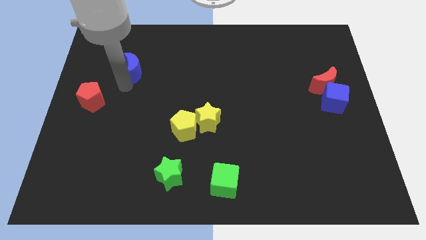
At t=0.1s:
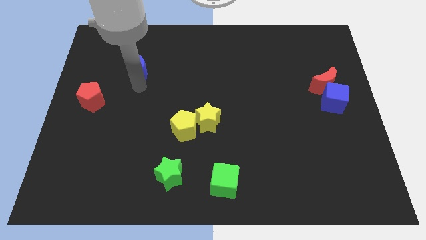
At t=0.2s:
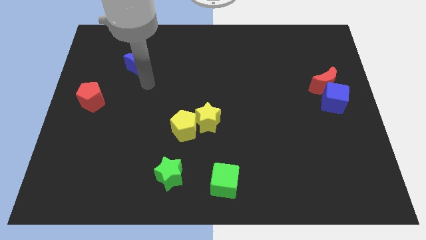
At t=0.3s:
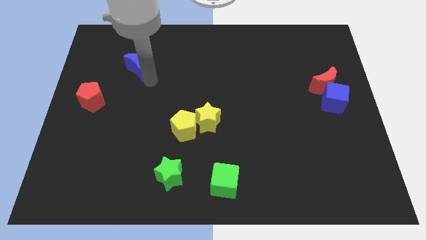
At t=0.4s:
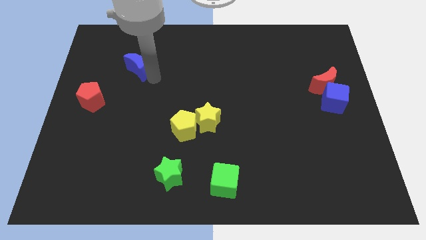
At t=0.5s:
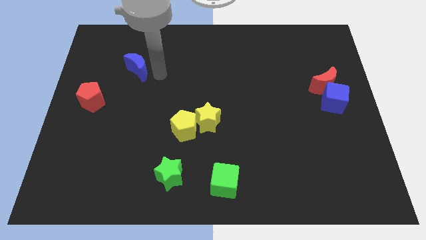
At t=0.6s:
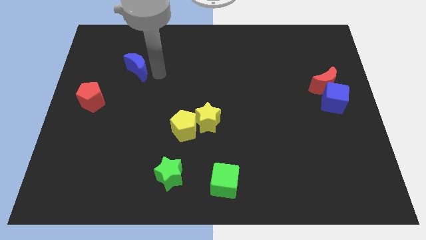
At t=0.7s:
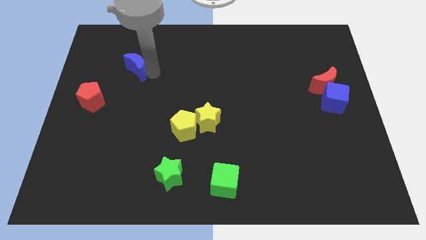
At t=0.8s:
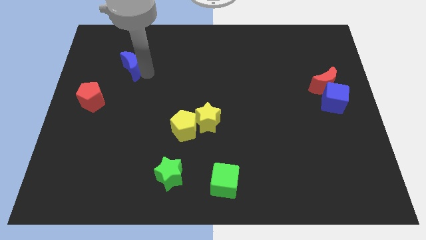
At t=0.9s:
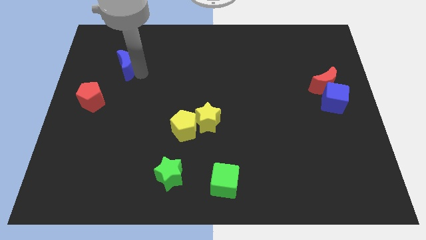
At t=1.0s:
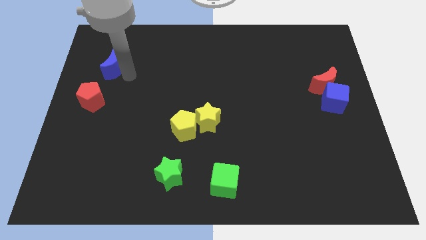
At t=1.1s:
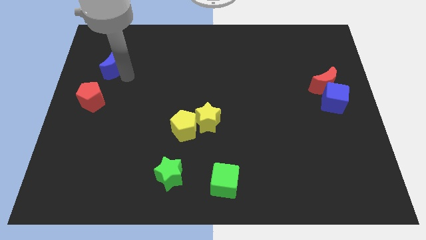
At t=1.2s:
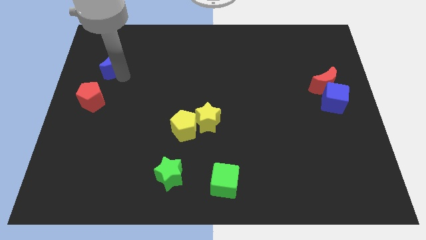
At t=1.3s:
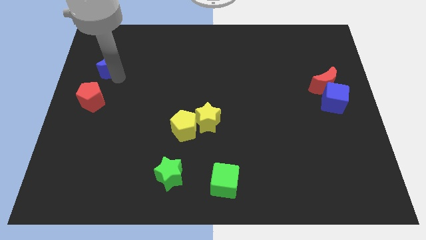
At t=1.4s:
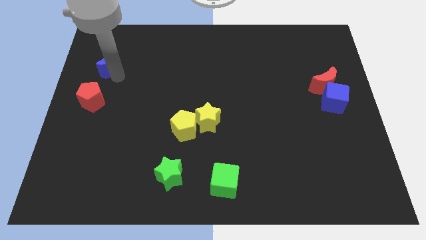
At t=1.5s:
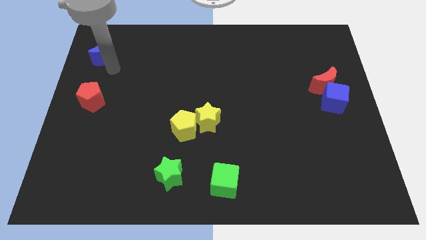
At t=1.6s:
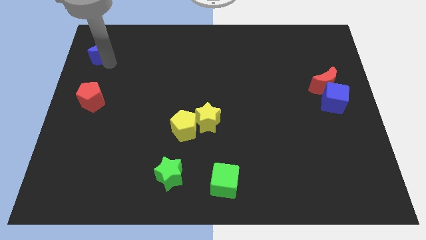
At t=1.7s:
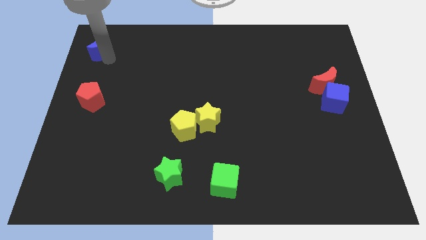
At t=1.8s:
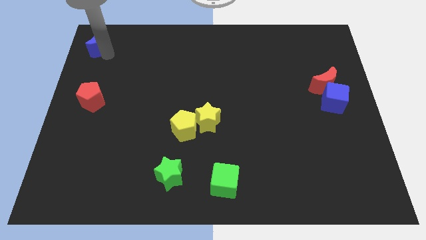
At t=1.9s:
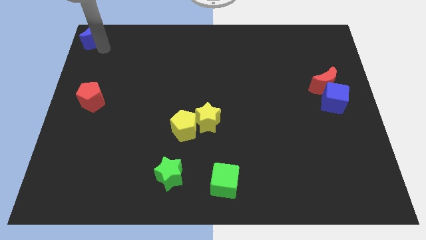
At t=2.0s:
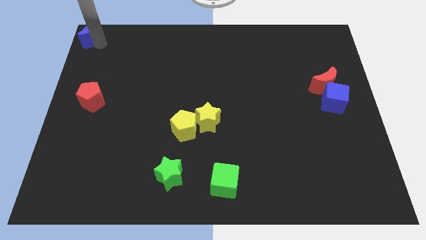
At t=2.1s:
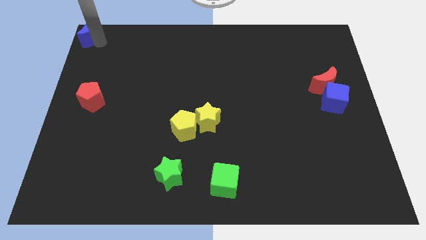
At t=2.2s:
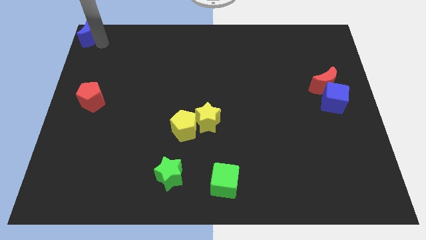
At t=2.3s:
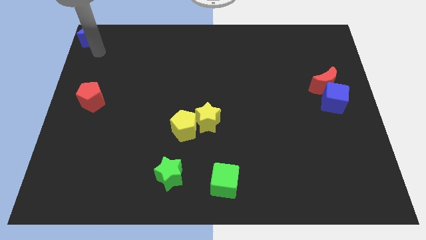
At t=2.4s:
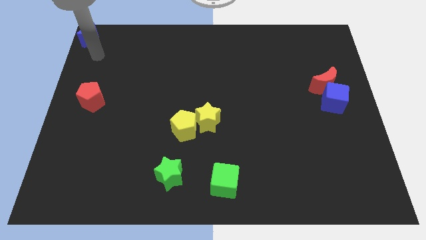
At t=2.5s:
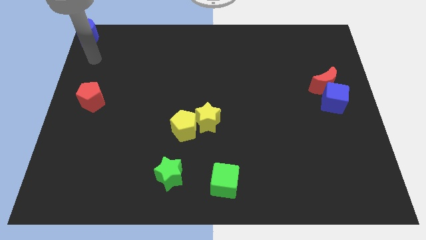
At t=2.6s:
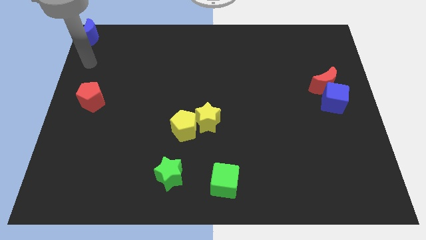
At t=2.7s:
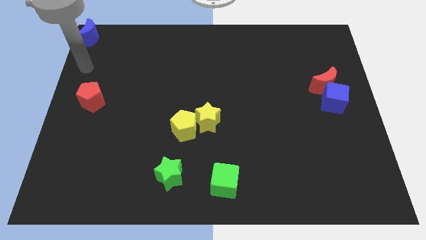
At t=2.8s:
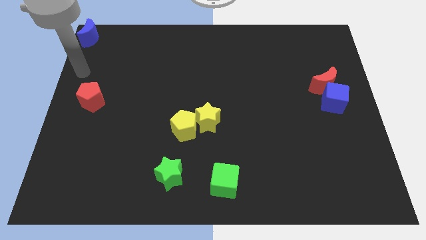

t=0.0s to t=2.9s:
place the blue moon at the top left corner of the board

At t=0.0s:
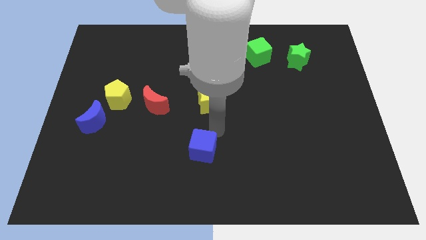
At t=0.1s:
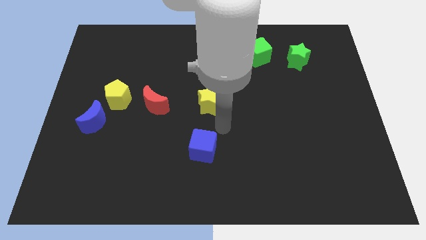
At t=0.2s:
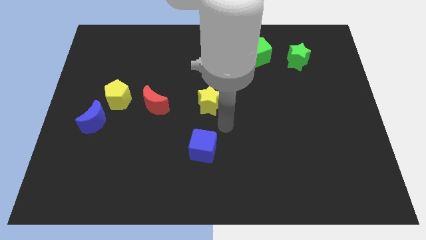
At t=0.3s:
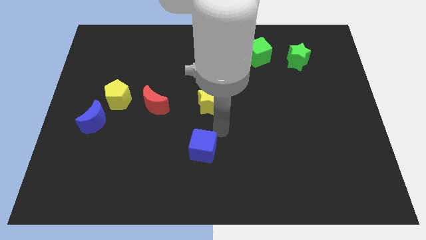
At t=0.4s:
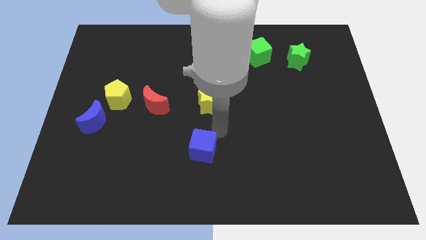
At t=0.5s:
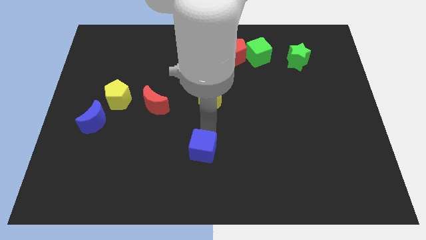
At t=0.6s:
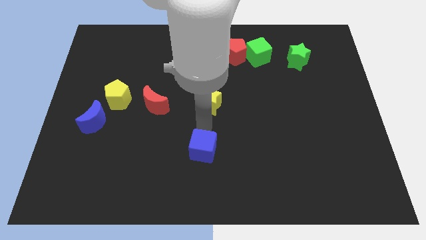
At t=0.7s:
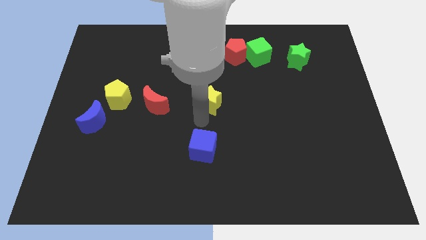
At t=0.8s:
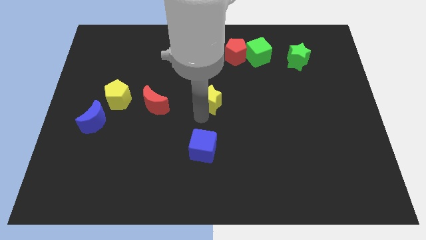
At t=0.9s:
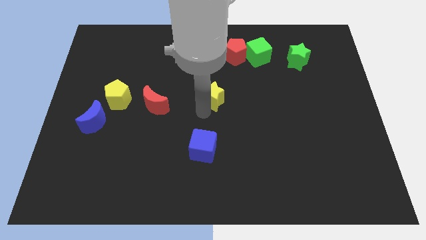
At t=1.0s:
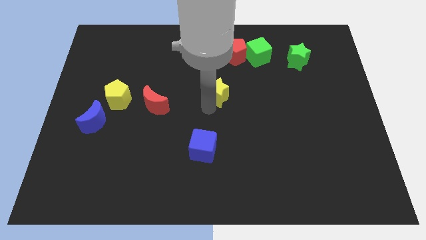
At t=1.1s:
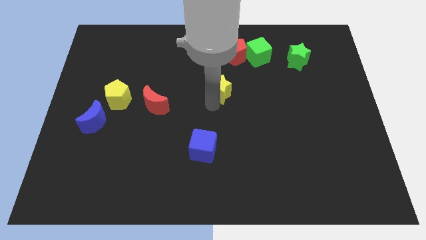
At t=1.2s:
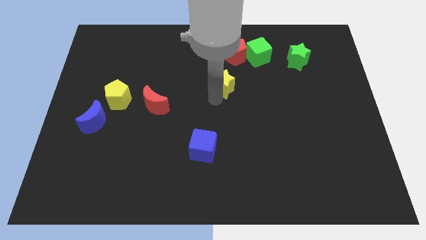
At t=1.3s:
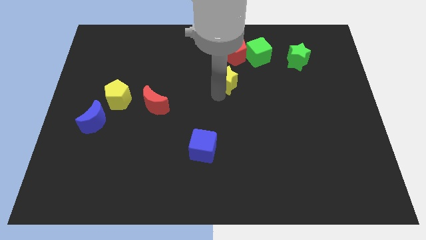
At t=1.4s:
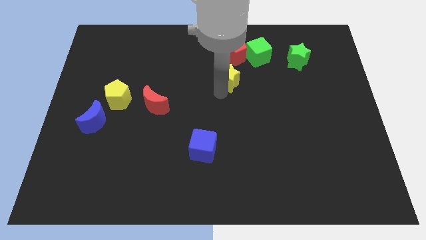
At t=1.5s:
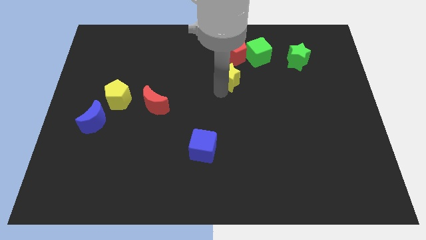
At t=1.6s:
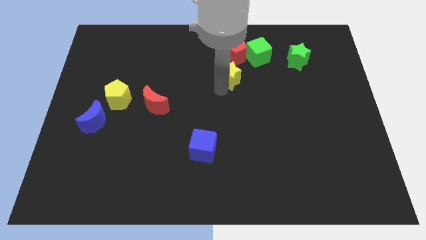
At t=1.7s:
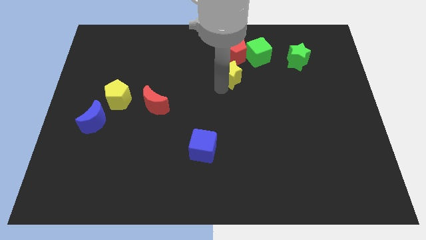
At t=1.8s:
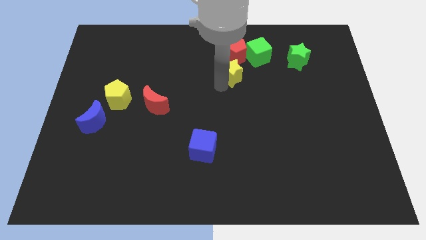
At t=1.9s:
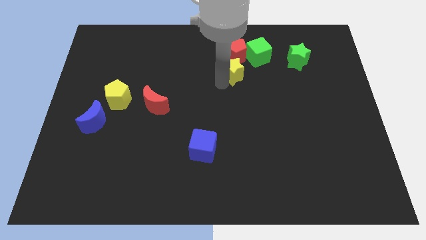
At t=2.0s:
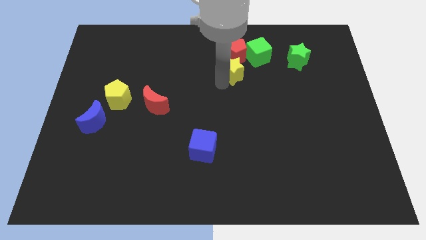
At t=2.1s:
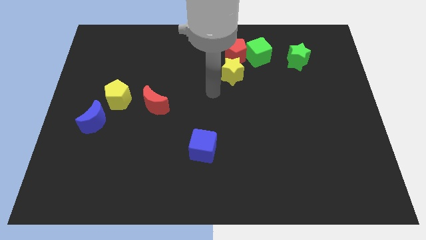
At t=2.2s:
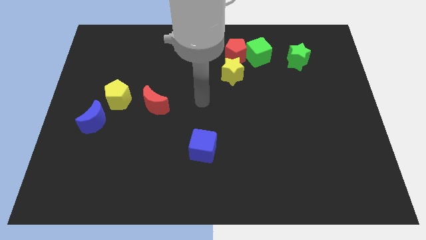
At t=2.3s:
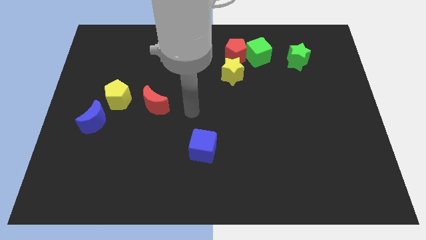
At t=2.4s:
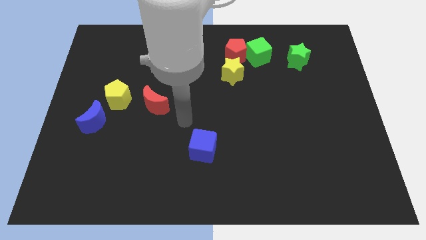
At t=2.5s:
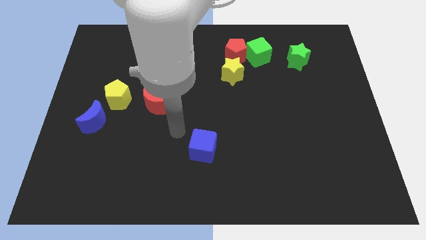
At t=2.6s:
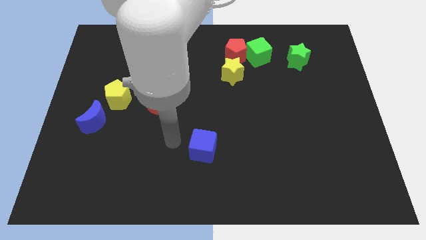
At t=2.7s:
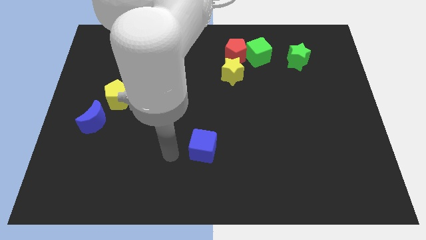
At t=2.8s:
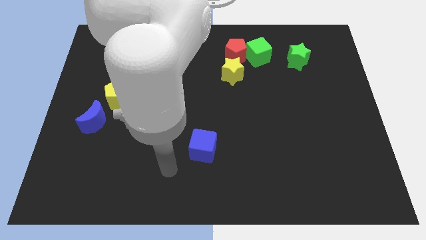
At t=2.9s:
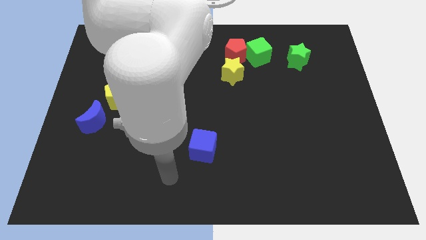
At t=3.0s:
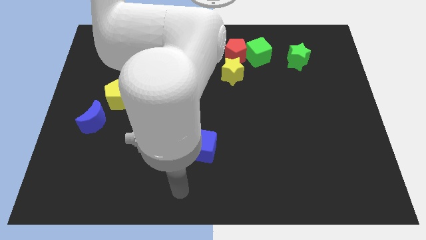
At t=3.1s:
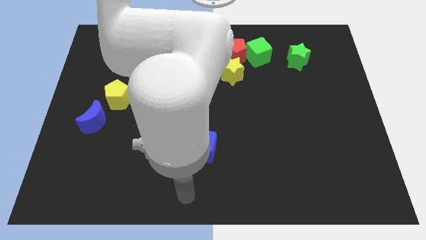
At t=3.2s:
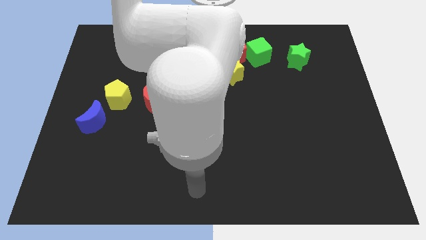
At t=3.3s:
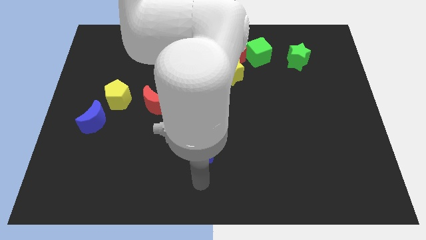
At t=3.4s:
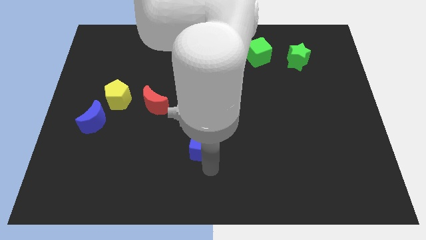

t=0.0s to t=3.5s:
push the yellow star into the red pentagon

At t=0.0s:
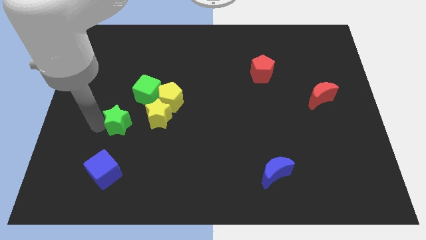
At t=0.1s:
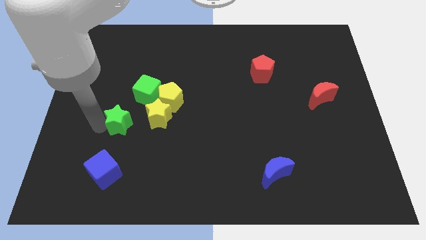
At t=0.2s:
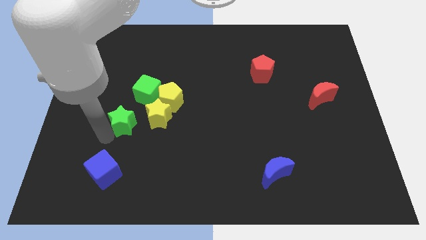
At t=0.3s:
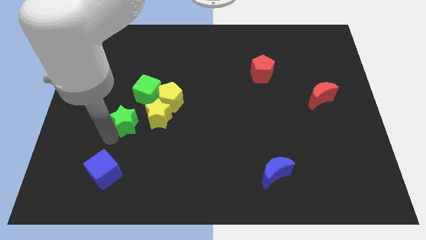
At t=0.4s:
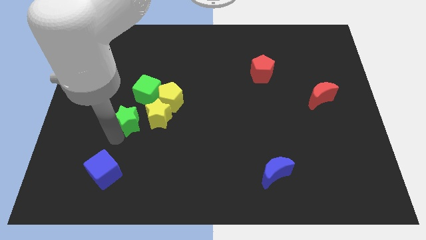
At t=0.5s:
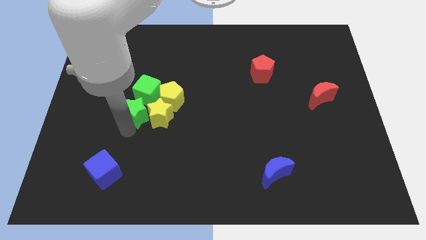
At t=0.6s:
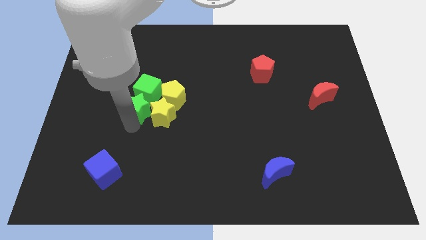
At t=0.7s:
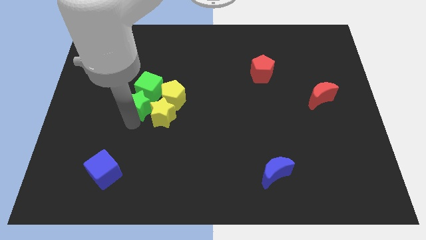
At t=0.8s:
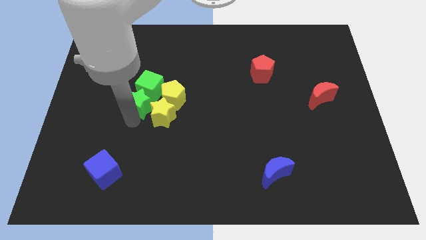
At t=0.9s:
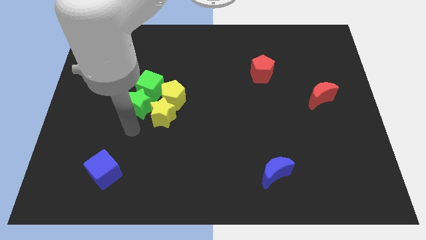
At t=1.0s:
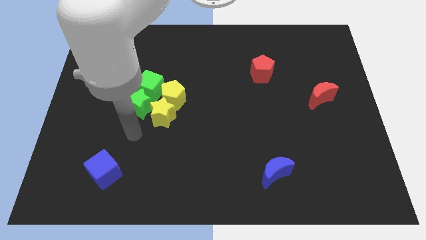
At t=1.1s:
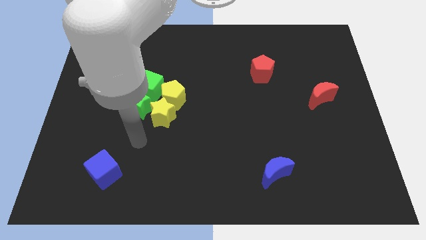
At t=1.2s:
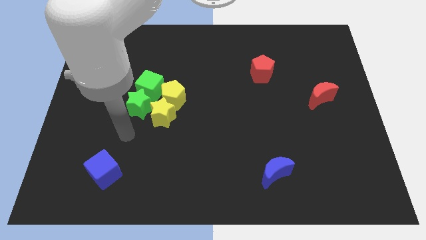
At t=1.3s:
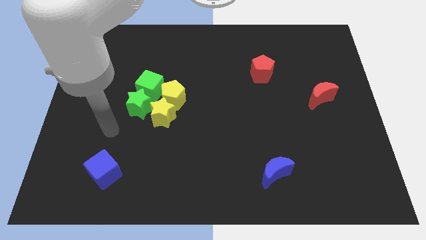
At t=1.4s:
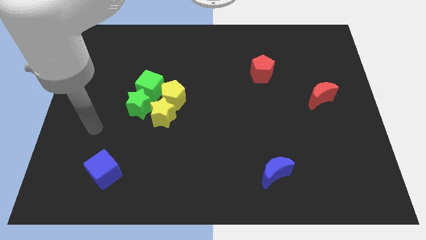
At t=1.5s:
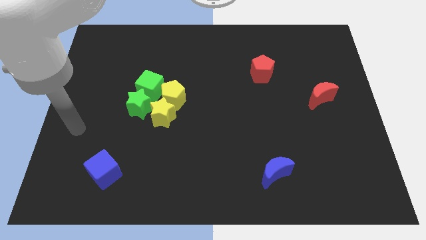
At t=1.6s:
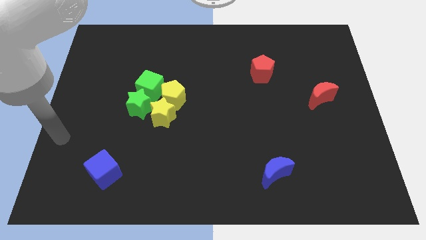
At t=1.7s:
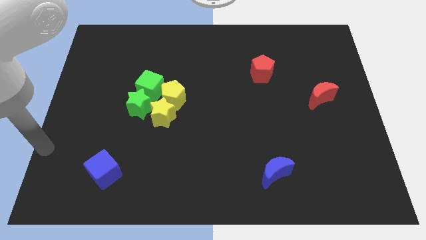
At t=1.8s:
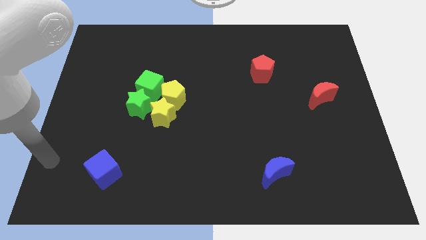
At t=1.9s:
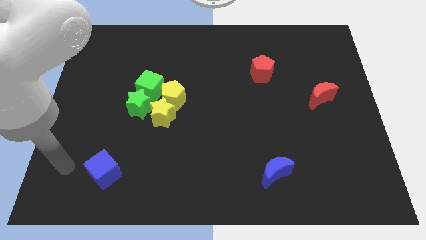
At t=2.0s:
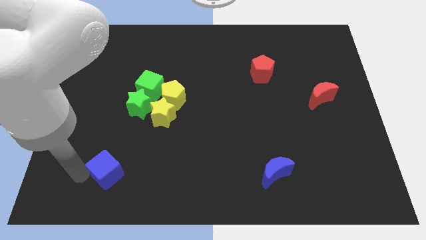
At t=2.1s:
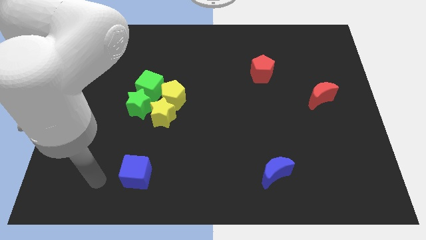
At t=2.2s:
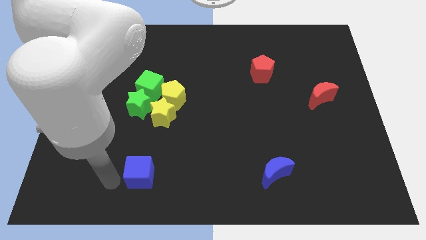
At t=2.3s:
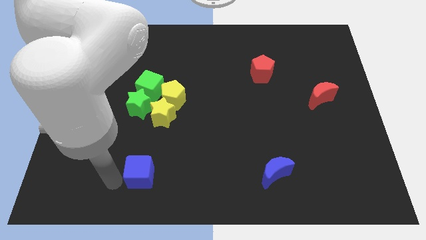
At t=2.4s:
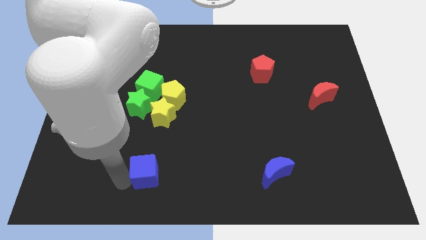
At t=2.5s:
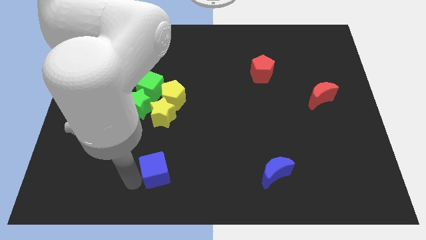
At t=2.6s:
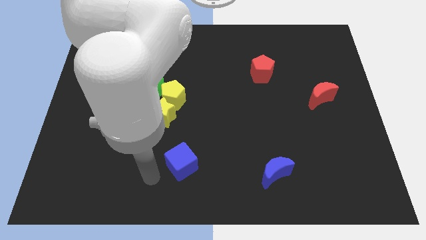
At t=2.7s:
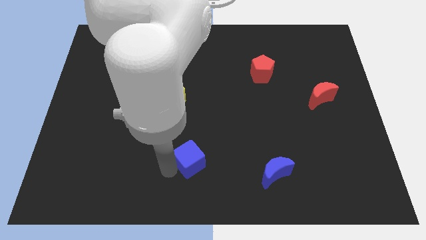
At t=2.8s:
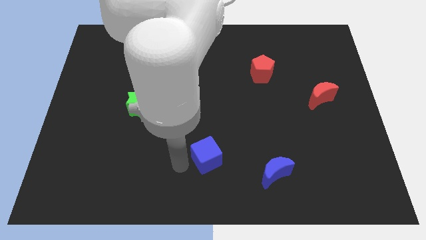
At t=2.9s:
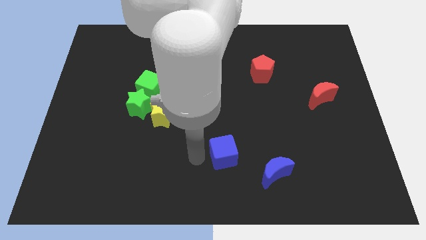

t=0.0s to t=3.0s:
place the blue cube left to the blue moon
